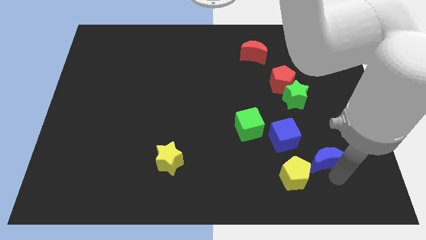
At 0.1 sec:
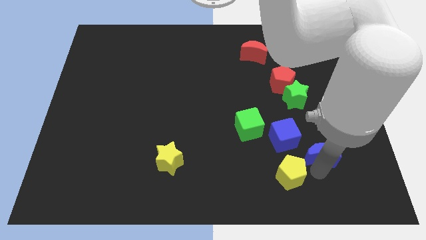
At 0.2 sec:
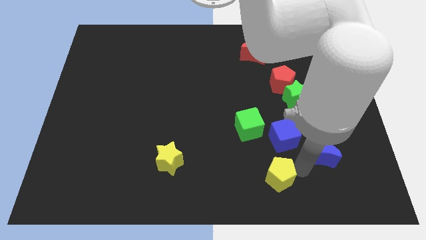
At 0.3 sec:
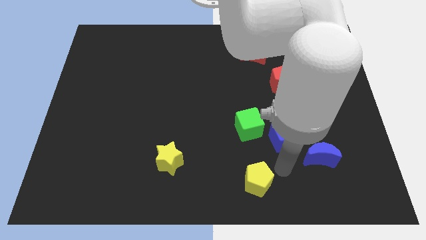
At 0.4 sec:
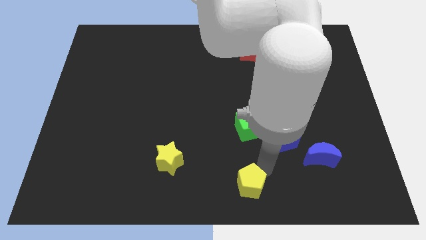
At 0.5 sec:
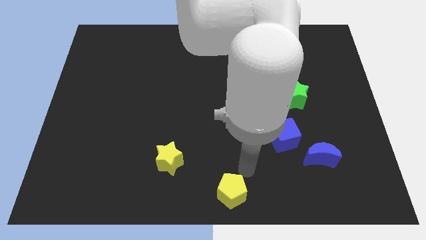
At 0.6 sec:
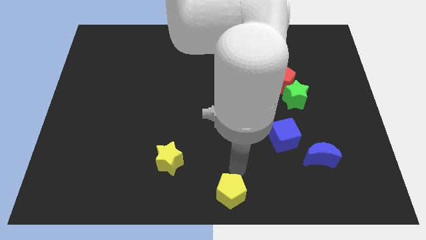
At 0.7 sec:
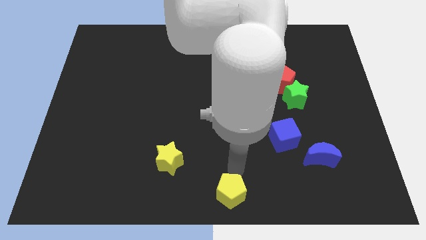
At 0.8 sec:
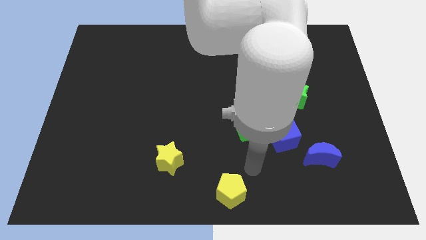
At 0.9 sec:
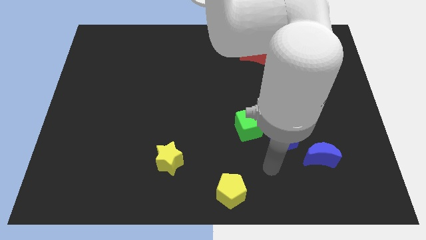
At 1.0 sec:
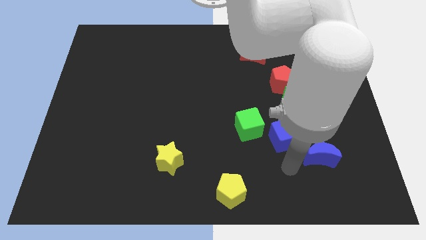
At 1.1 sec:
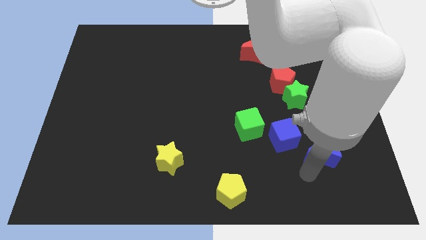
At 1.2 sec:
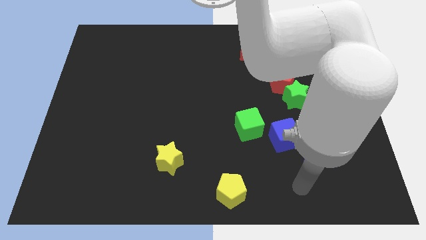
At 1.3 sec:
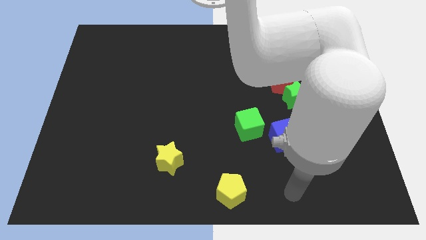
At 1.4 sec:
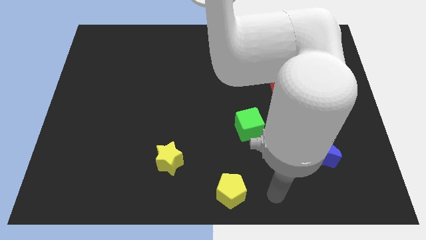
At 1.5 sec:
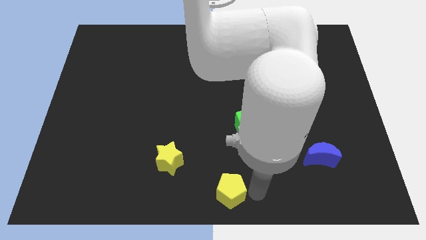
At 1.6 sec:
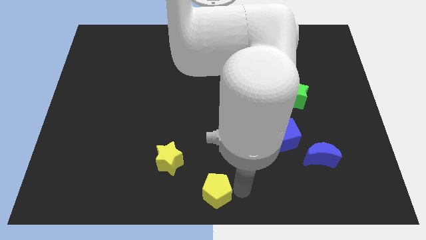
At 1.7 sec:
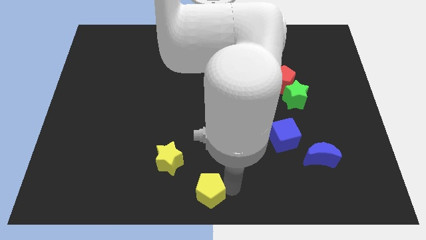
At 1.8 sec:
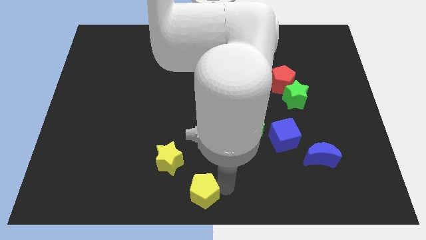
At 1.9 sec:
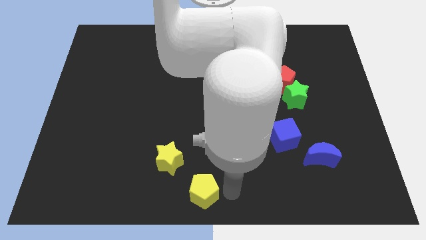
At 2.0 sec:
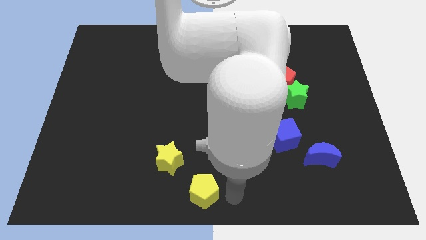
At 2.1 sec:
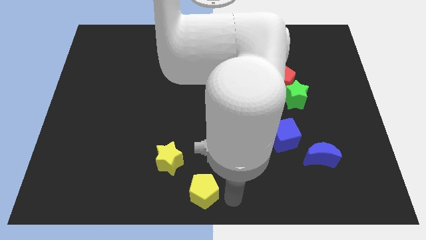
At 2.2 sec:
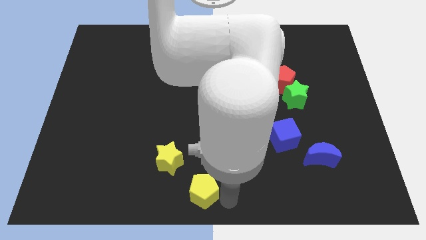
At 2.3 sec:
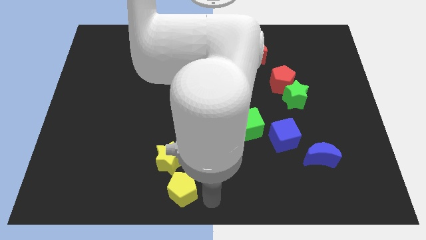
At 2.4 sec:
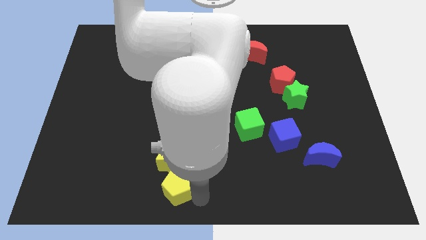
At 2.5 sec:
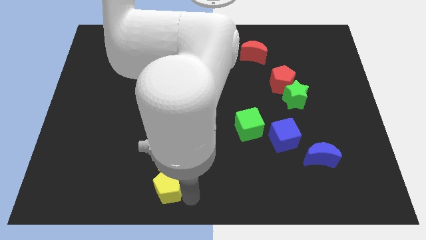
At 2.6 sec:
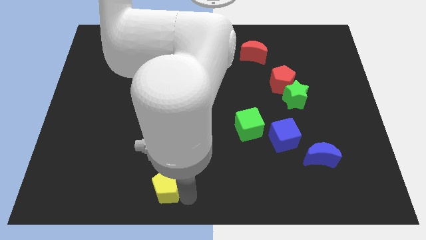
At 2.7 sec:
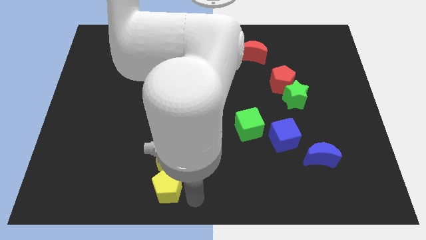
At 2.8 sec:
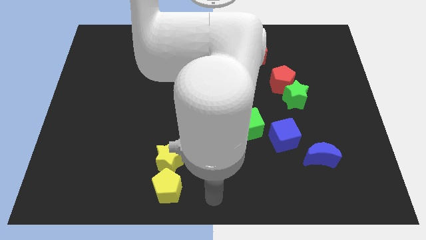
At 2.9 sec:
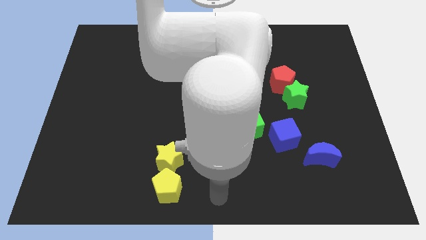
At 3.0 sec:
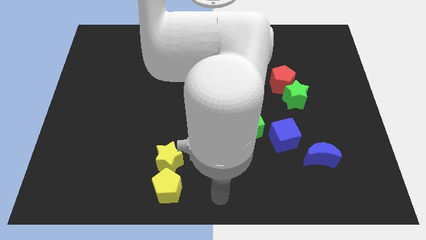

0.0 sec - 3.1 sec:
place the yellow pentagon below the yellow star

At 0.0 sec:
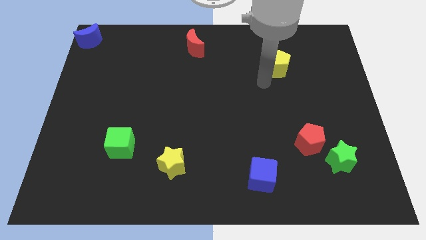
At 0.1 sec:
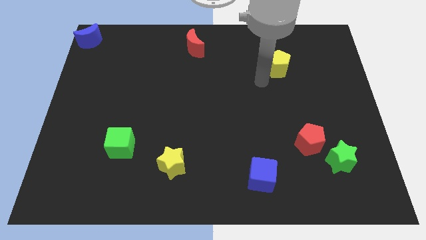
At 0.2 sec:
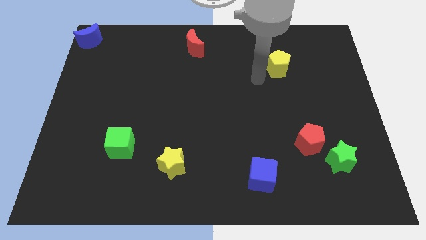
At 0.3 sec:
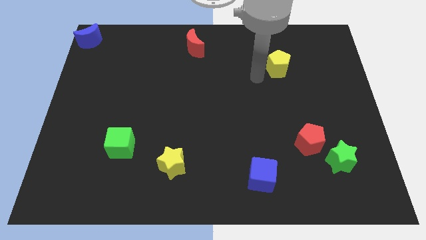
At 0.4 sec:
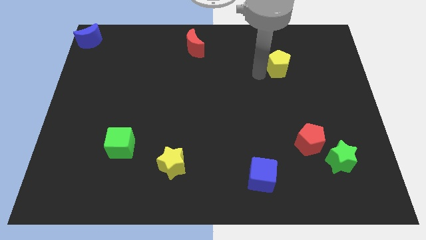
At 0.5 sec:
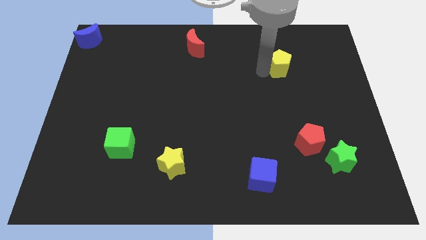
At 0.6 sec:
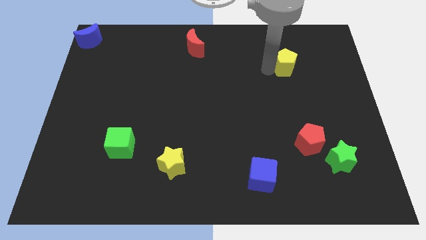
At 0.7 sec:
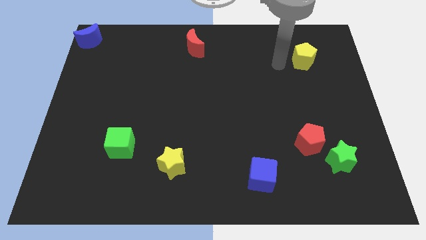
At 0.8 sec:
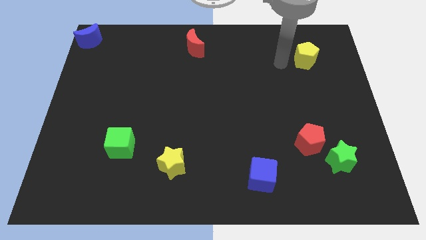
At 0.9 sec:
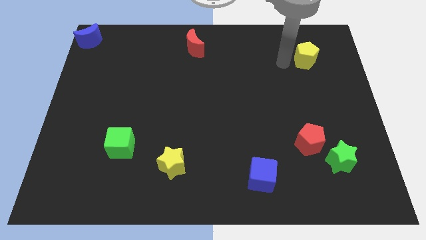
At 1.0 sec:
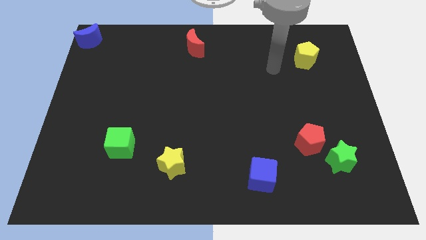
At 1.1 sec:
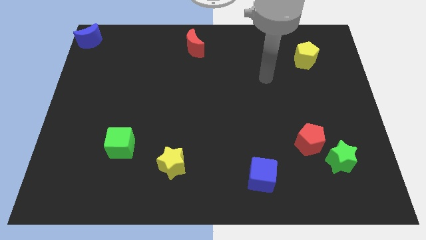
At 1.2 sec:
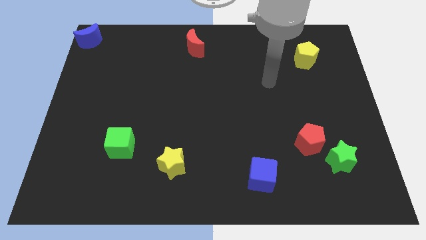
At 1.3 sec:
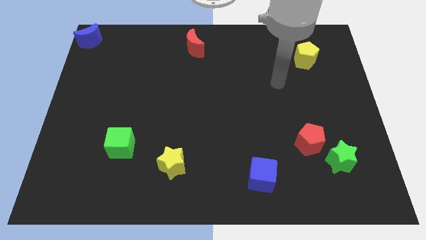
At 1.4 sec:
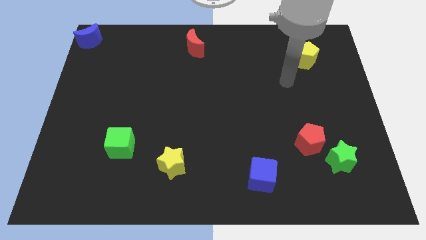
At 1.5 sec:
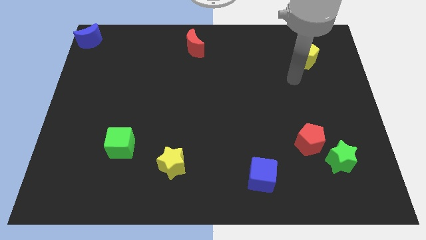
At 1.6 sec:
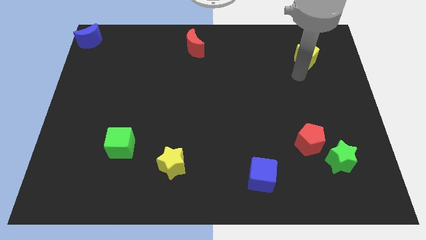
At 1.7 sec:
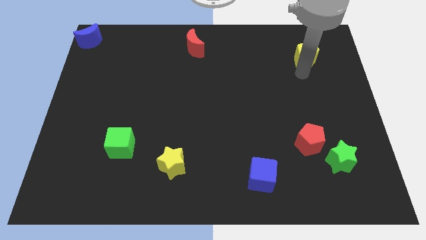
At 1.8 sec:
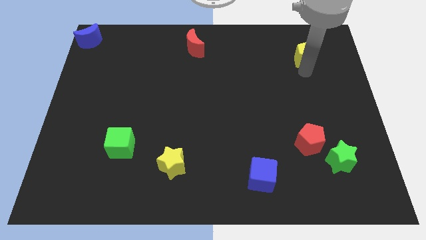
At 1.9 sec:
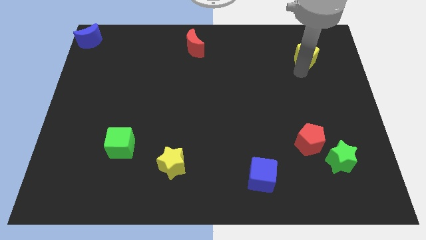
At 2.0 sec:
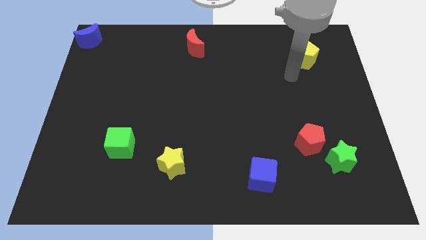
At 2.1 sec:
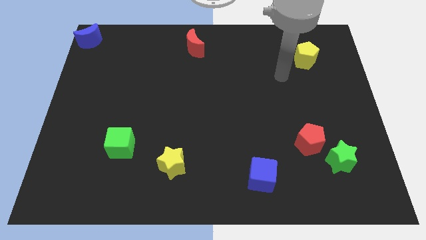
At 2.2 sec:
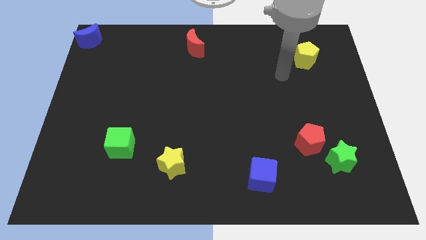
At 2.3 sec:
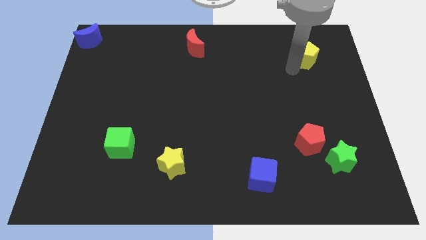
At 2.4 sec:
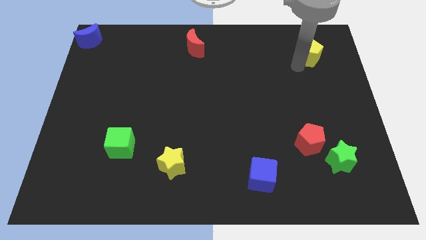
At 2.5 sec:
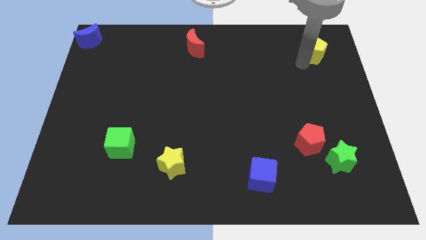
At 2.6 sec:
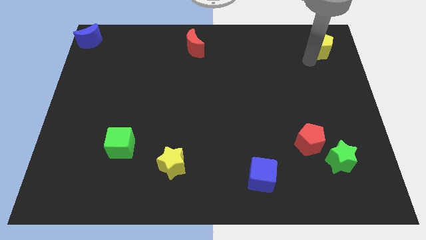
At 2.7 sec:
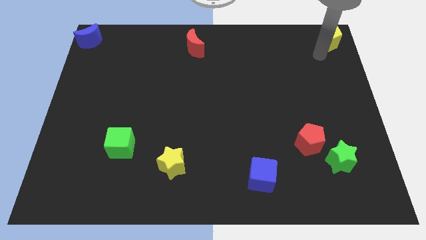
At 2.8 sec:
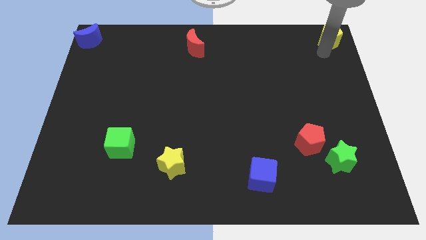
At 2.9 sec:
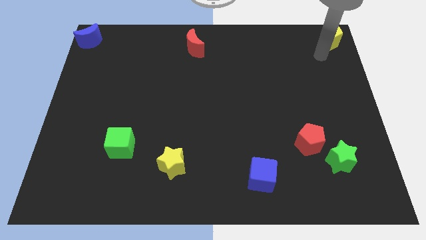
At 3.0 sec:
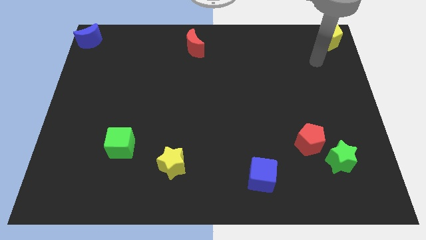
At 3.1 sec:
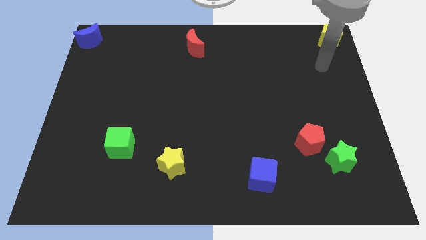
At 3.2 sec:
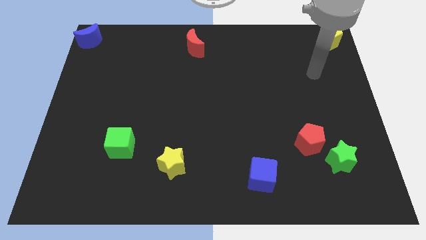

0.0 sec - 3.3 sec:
move the yellow pentagon to the top right corner of the board

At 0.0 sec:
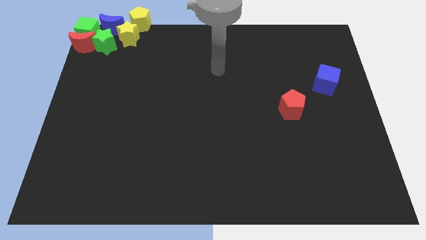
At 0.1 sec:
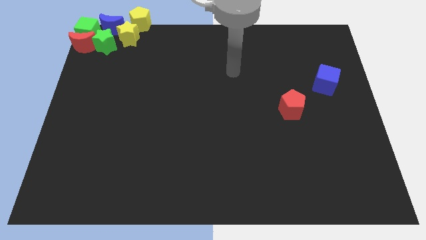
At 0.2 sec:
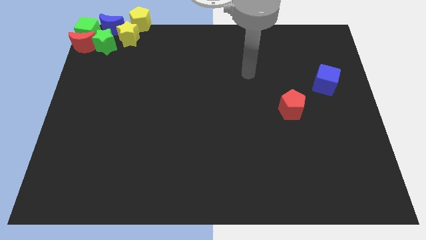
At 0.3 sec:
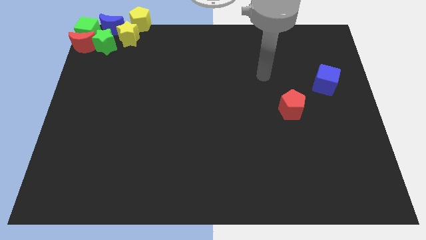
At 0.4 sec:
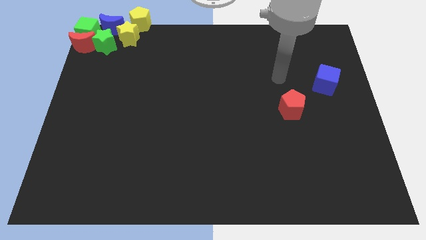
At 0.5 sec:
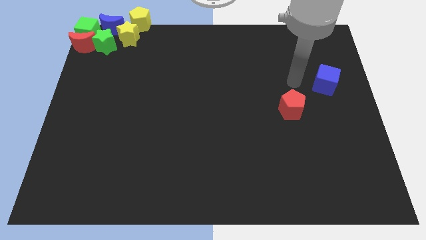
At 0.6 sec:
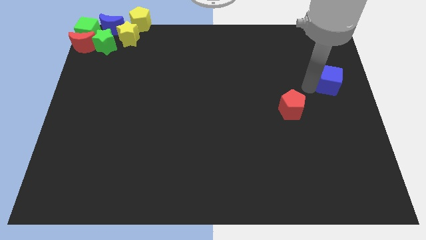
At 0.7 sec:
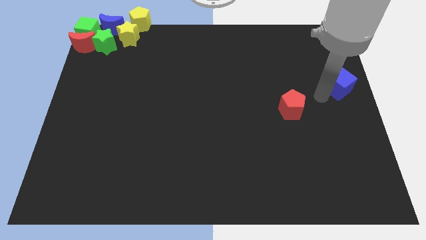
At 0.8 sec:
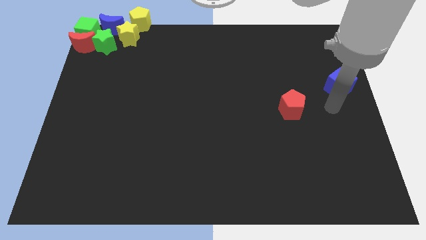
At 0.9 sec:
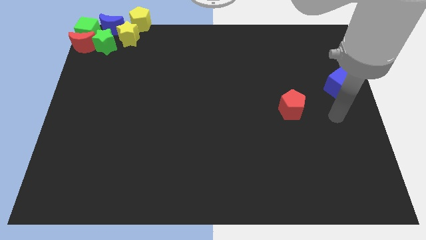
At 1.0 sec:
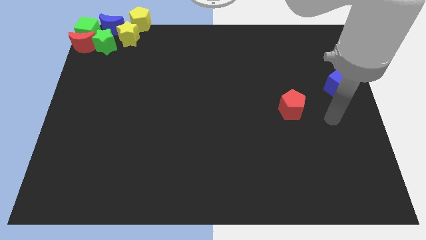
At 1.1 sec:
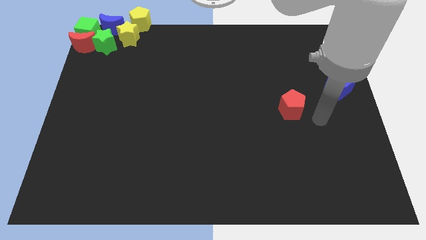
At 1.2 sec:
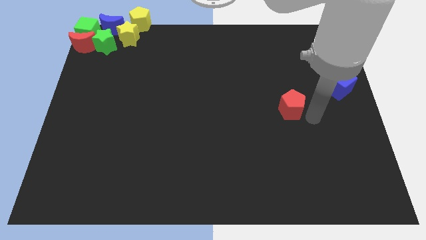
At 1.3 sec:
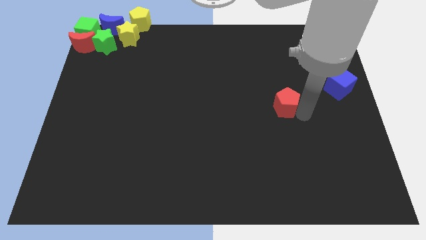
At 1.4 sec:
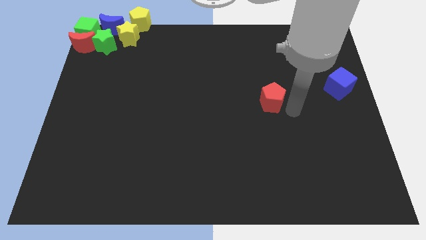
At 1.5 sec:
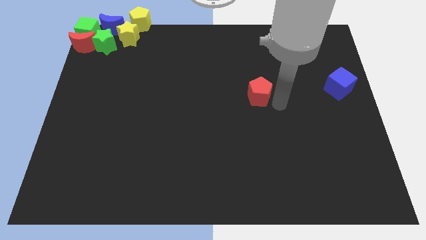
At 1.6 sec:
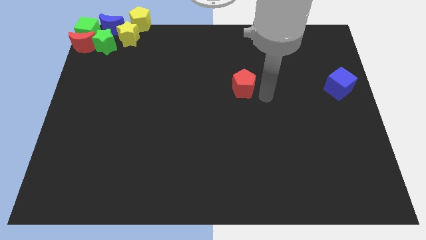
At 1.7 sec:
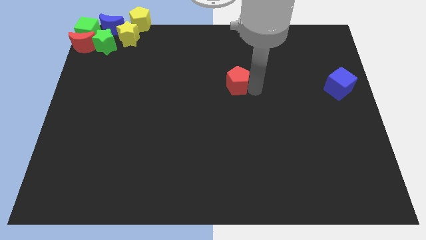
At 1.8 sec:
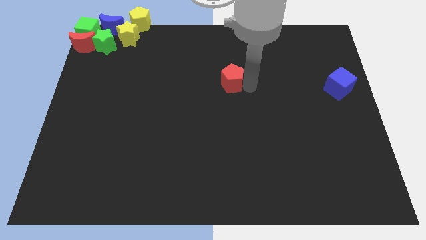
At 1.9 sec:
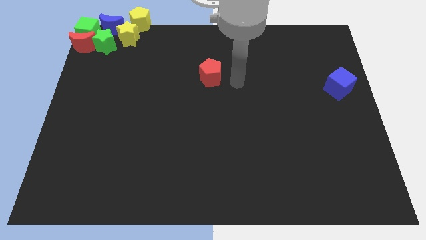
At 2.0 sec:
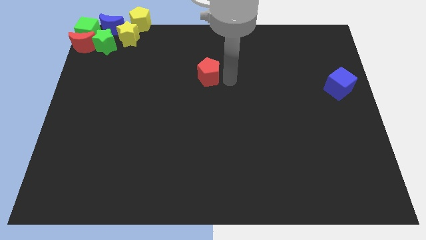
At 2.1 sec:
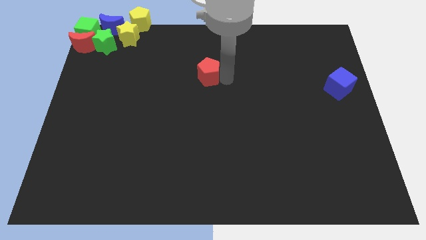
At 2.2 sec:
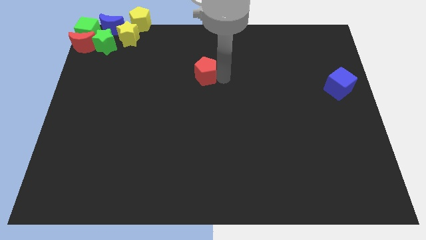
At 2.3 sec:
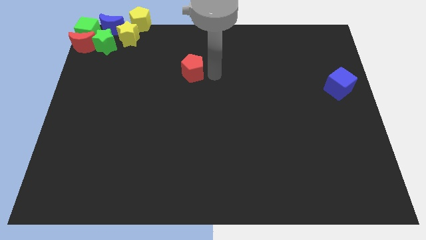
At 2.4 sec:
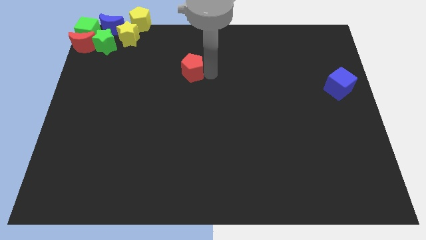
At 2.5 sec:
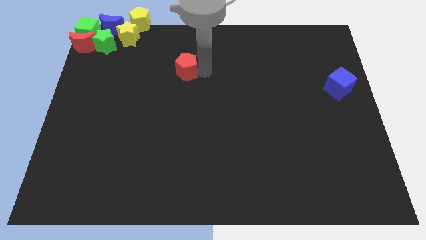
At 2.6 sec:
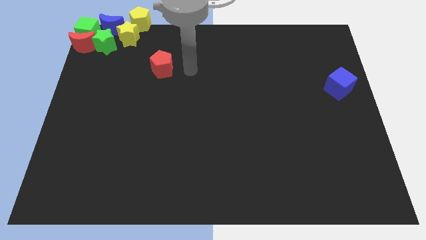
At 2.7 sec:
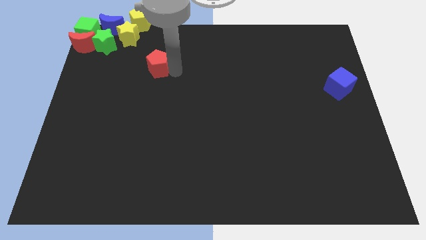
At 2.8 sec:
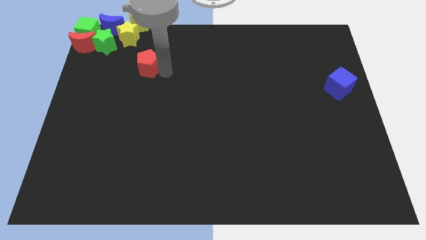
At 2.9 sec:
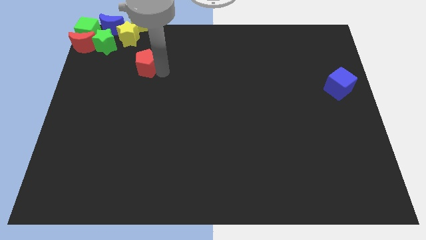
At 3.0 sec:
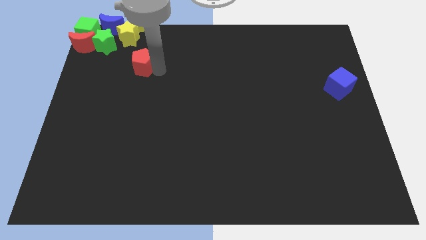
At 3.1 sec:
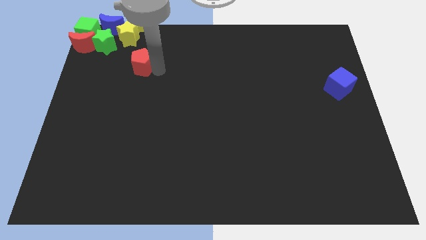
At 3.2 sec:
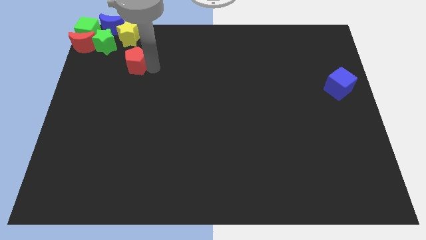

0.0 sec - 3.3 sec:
push red pentagon below yellow star
